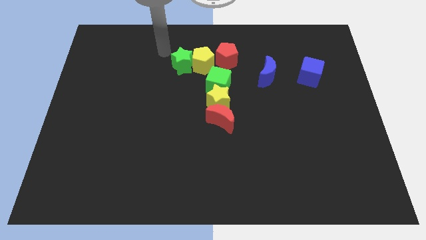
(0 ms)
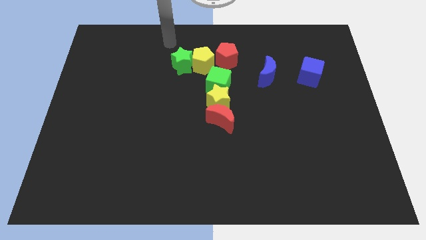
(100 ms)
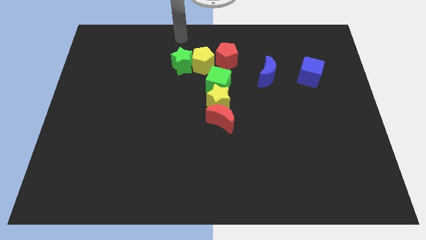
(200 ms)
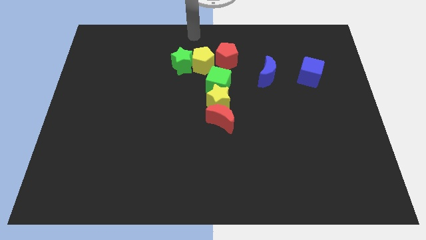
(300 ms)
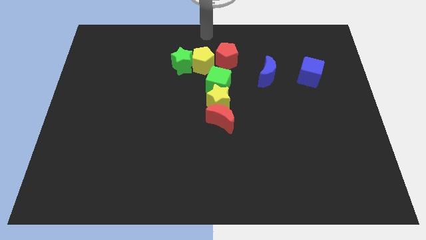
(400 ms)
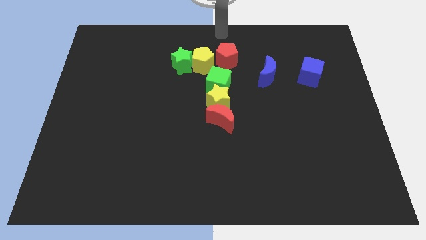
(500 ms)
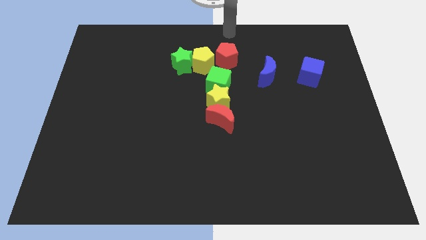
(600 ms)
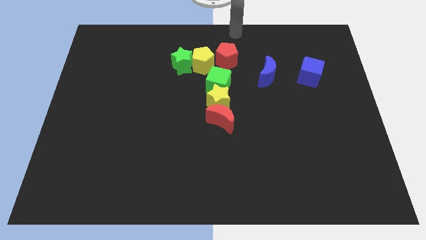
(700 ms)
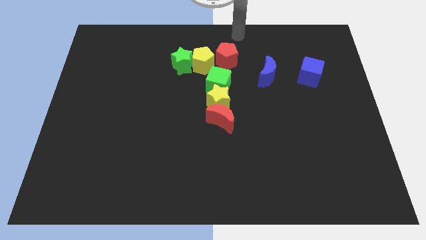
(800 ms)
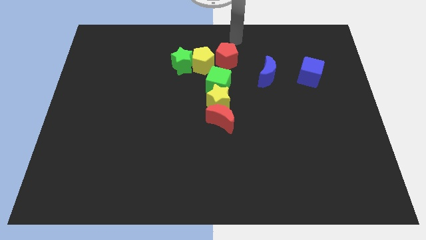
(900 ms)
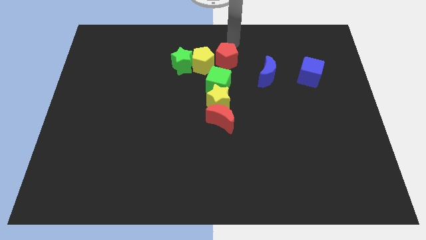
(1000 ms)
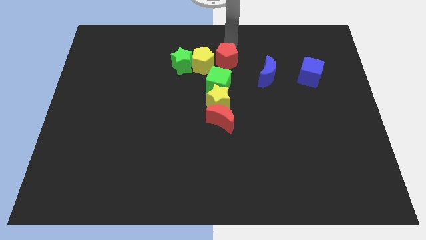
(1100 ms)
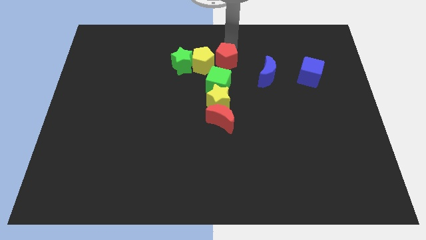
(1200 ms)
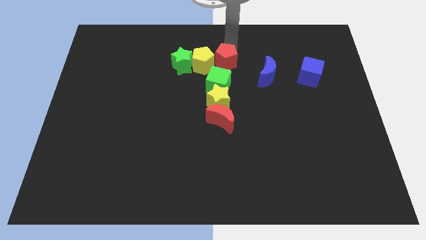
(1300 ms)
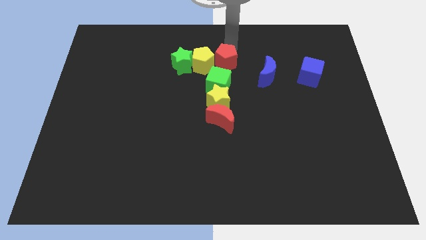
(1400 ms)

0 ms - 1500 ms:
touch the top of the red pentagon

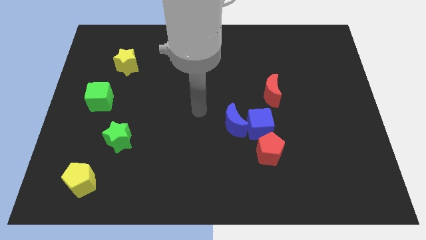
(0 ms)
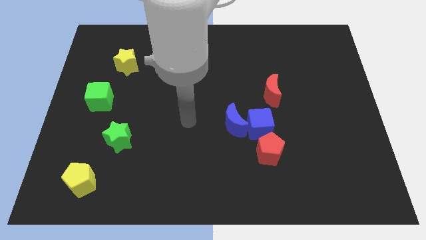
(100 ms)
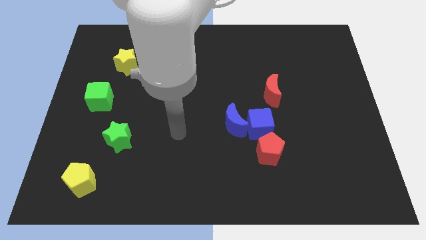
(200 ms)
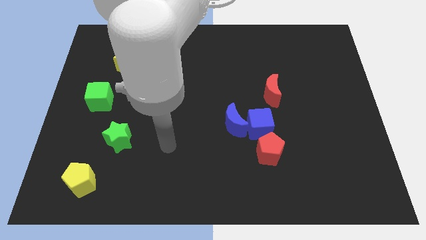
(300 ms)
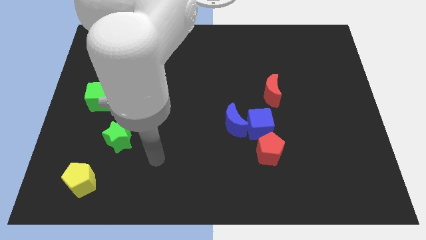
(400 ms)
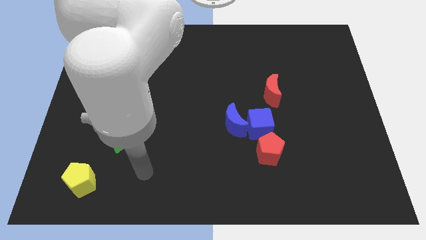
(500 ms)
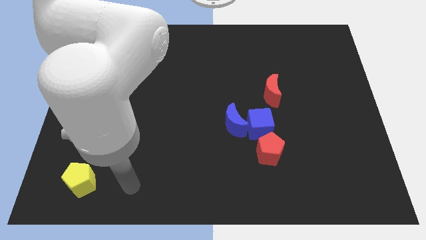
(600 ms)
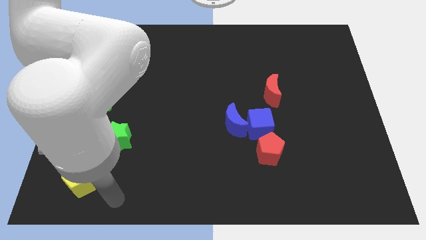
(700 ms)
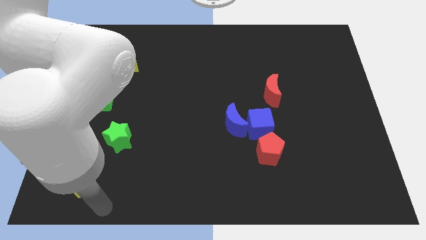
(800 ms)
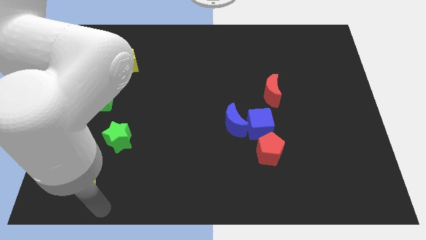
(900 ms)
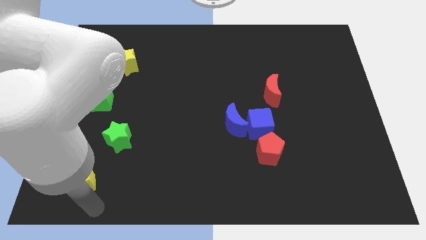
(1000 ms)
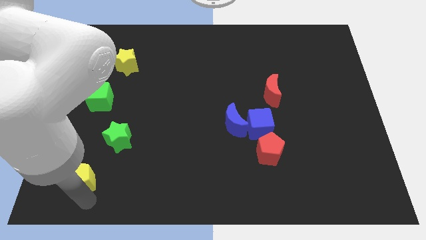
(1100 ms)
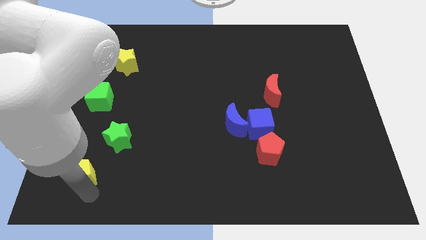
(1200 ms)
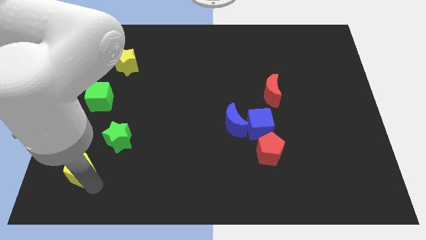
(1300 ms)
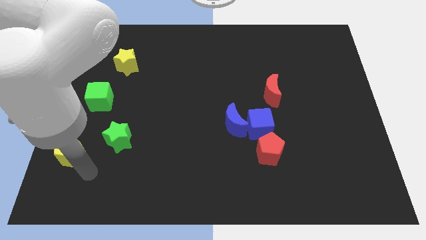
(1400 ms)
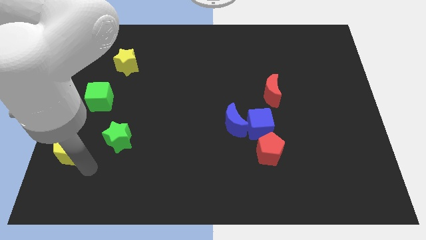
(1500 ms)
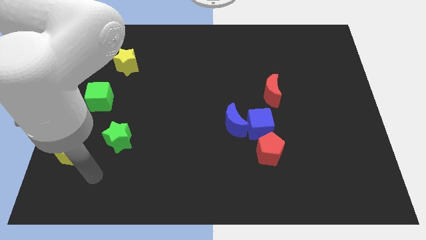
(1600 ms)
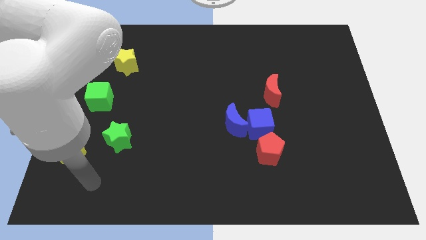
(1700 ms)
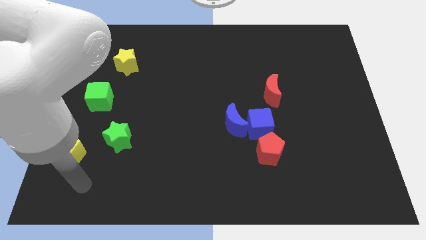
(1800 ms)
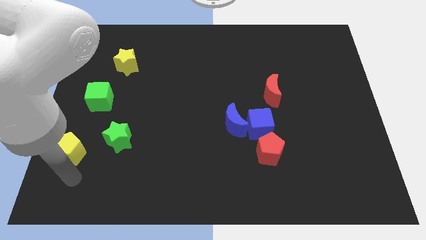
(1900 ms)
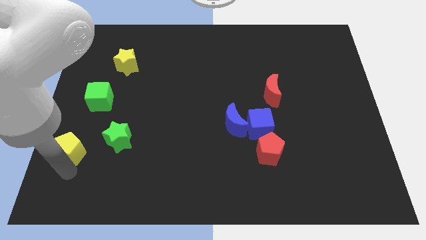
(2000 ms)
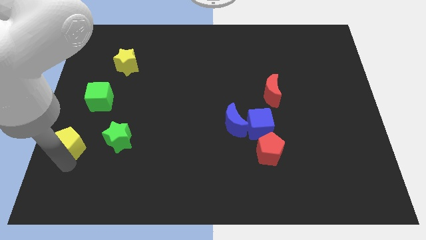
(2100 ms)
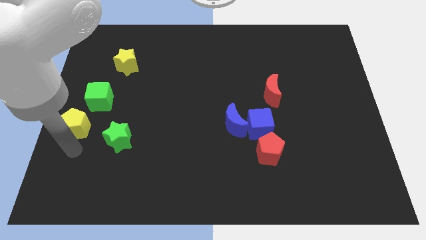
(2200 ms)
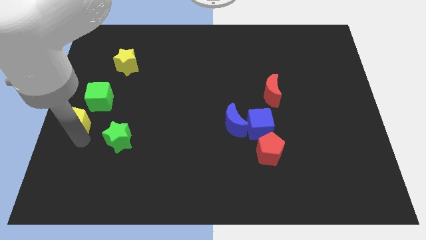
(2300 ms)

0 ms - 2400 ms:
place the yellow pentagon at the top left side of green star

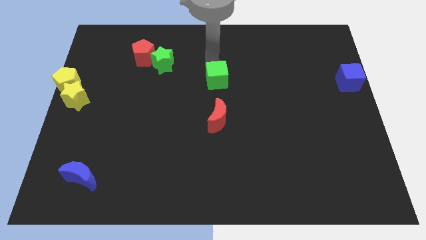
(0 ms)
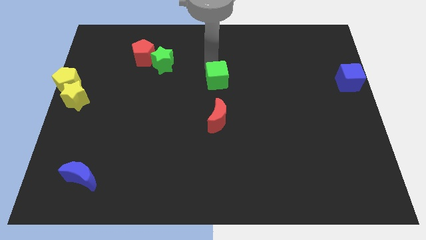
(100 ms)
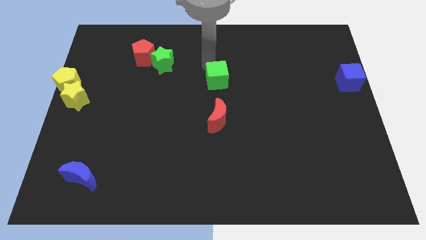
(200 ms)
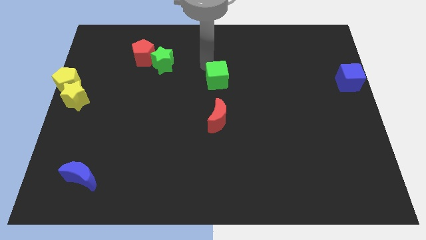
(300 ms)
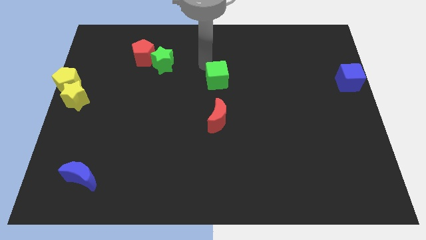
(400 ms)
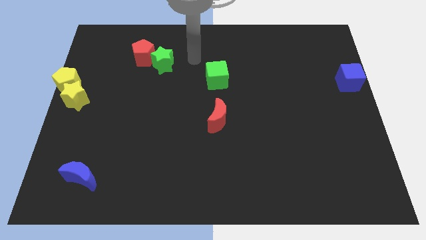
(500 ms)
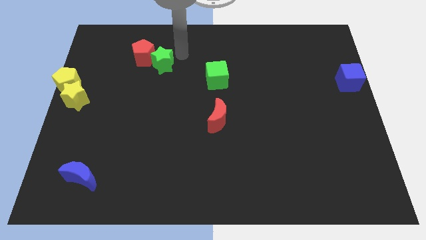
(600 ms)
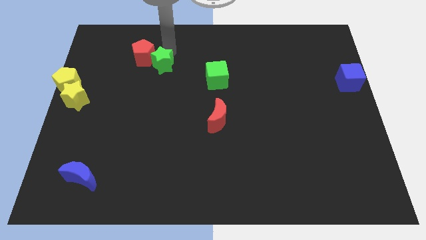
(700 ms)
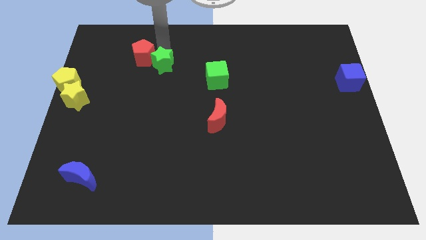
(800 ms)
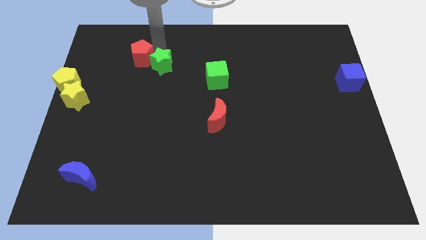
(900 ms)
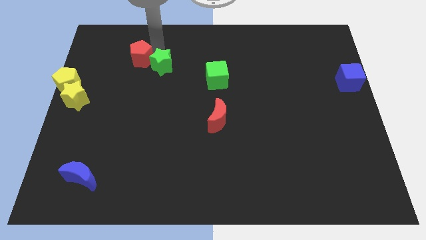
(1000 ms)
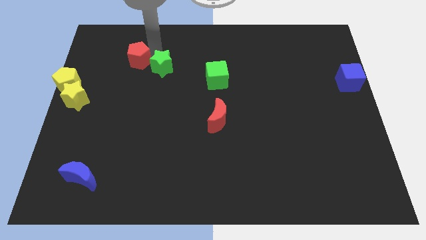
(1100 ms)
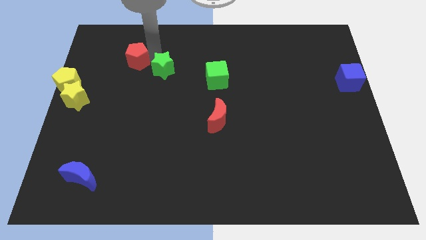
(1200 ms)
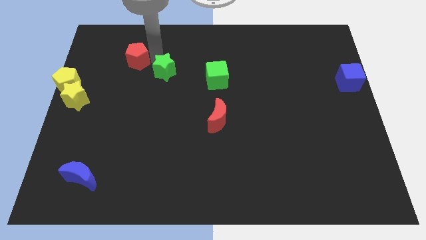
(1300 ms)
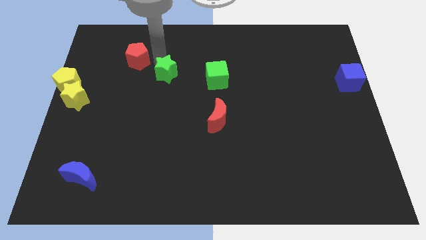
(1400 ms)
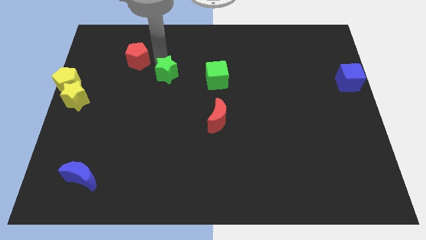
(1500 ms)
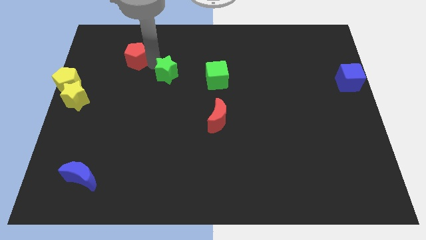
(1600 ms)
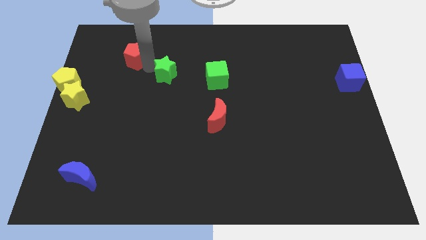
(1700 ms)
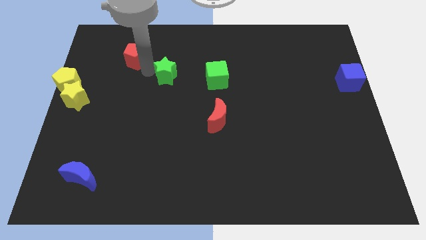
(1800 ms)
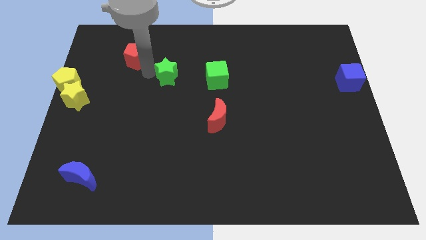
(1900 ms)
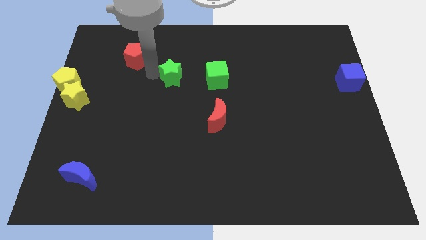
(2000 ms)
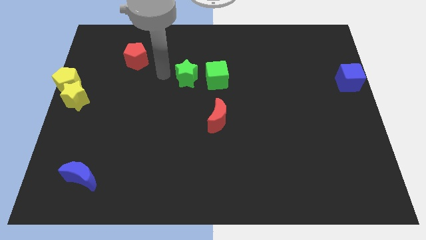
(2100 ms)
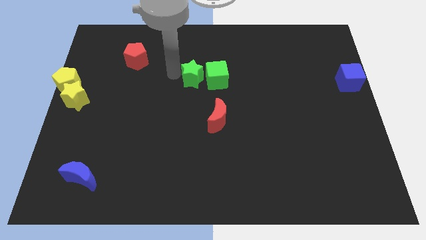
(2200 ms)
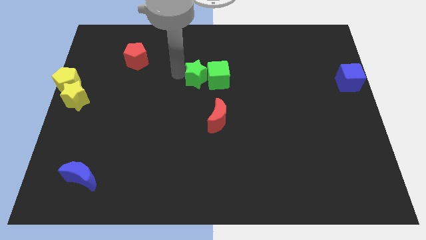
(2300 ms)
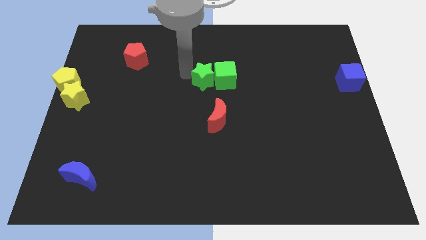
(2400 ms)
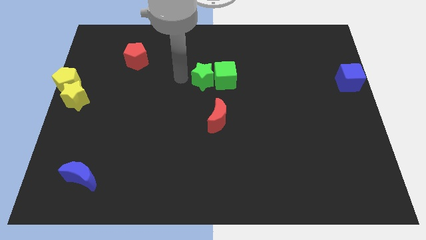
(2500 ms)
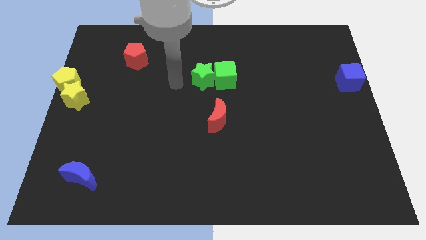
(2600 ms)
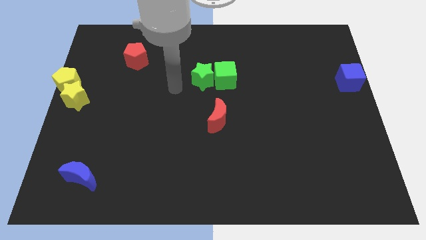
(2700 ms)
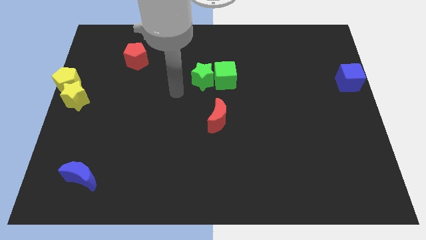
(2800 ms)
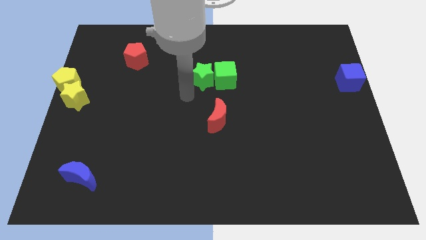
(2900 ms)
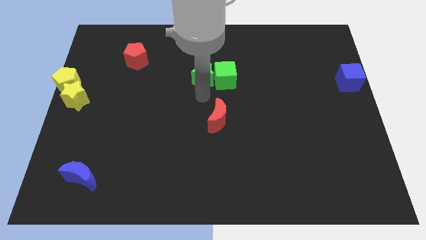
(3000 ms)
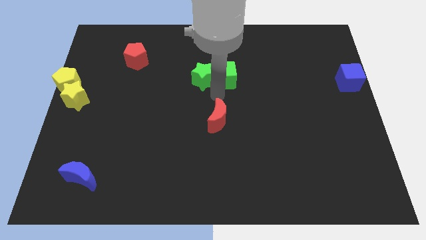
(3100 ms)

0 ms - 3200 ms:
move the green star at the left side of the green cube

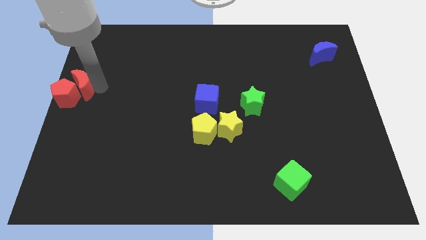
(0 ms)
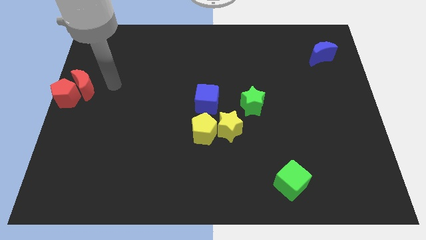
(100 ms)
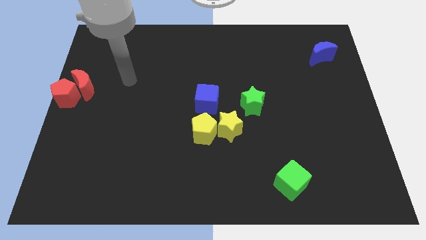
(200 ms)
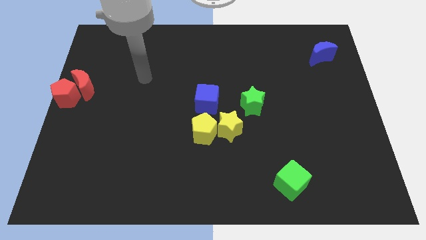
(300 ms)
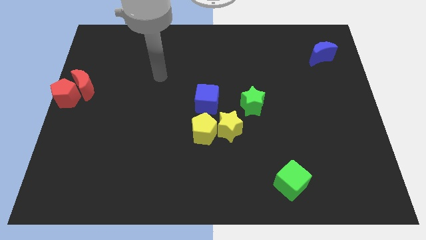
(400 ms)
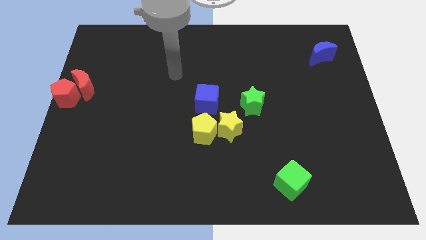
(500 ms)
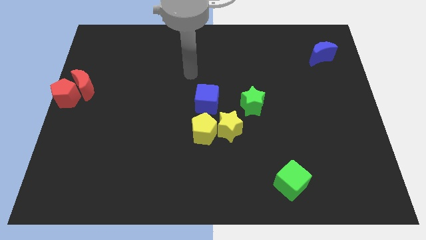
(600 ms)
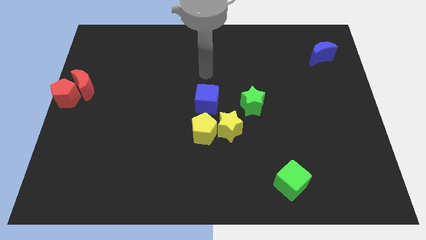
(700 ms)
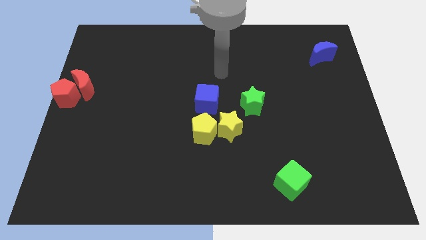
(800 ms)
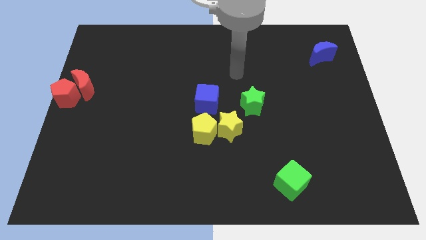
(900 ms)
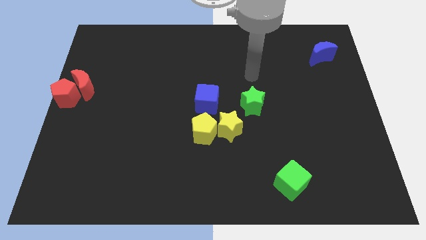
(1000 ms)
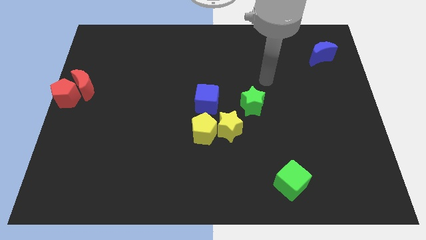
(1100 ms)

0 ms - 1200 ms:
move your arm to the top of the green star

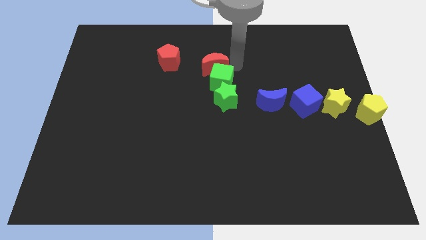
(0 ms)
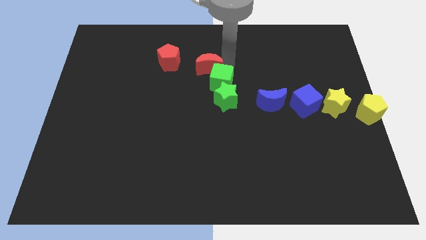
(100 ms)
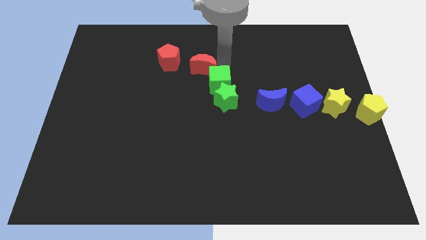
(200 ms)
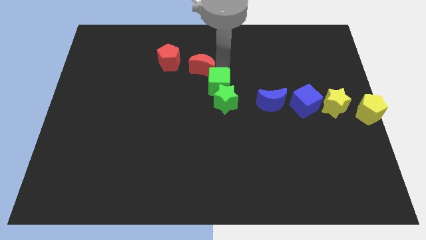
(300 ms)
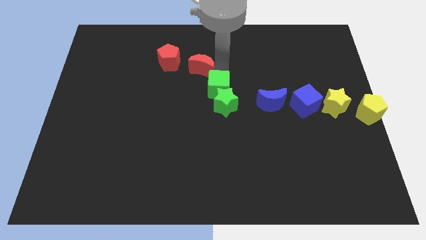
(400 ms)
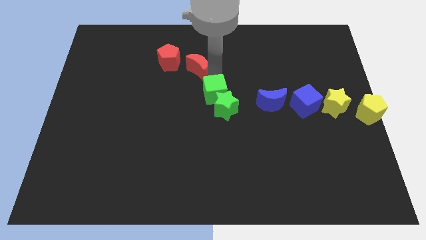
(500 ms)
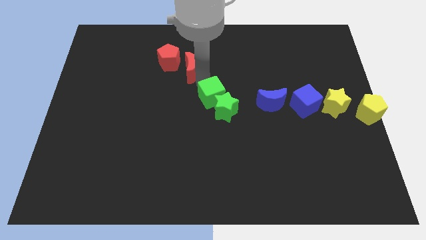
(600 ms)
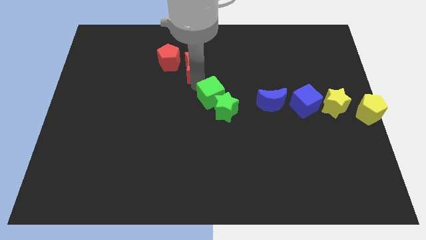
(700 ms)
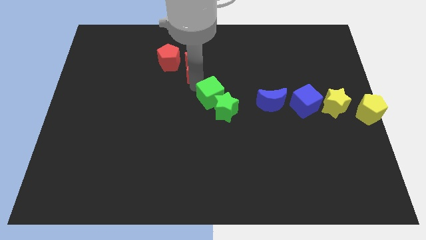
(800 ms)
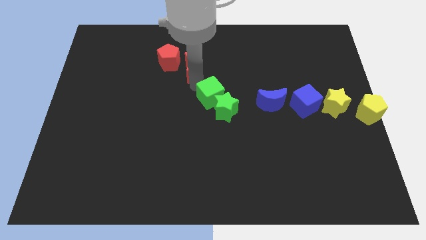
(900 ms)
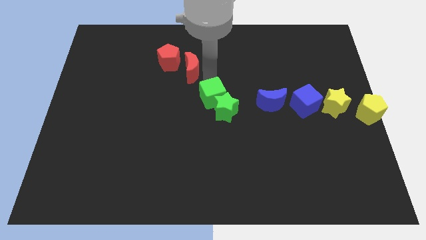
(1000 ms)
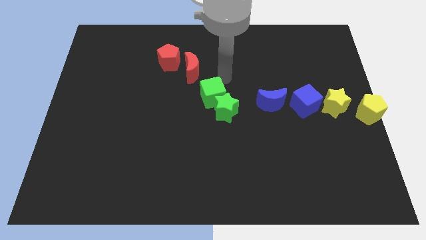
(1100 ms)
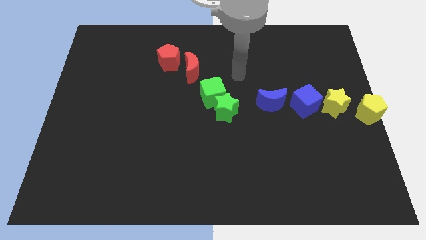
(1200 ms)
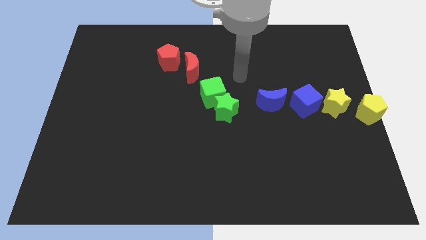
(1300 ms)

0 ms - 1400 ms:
separate the red moon from green blocks
